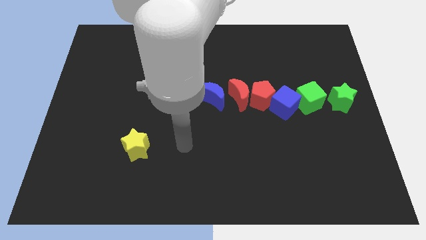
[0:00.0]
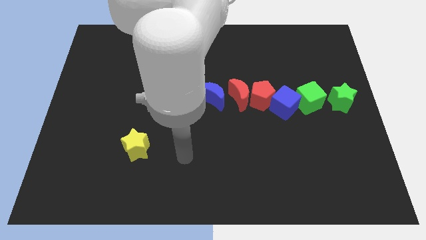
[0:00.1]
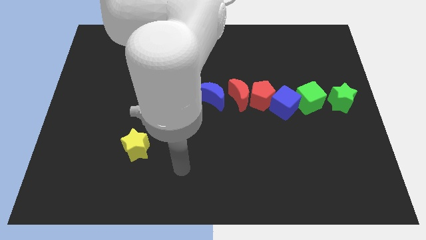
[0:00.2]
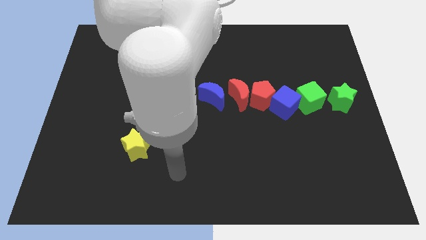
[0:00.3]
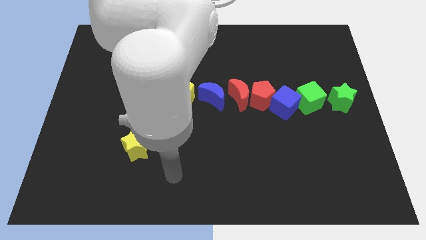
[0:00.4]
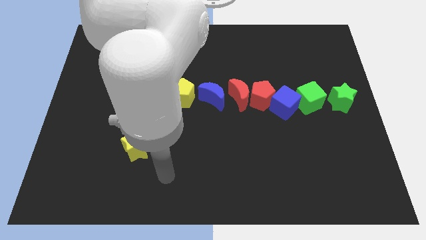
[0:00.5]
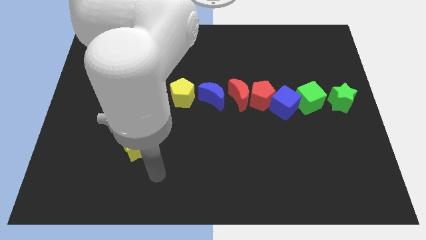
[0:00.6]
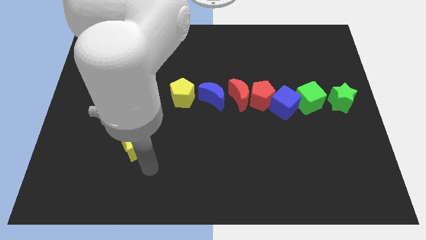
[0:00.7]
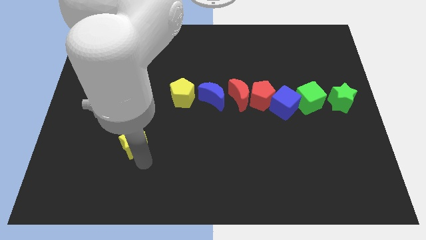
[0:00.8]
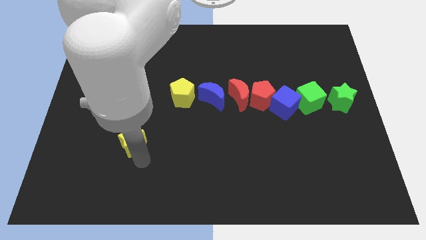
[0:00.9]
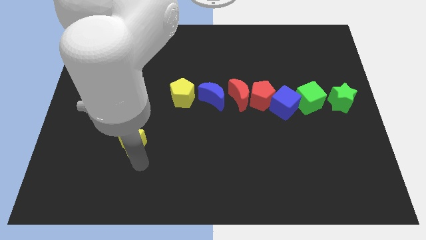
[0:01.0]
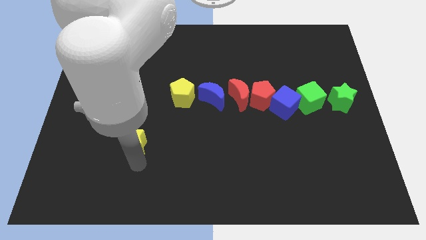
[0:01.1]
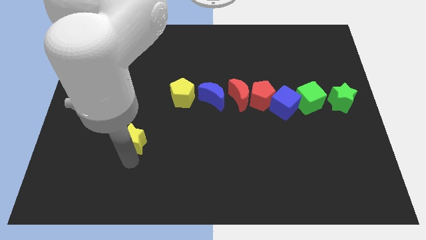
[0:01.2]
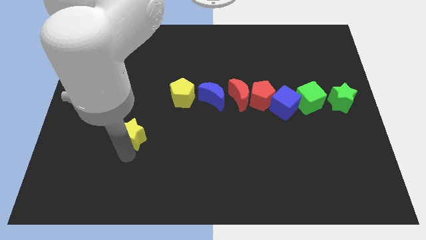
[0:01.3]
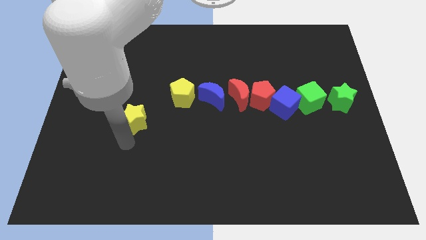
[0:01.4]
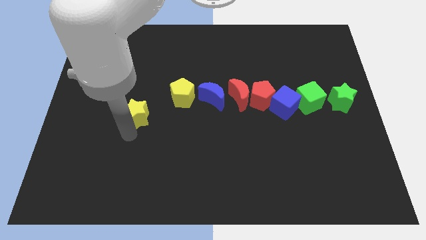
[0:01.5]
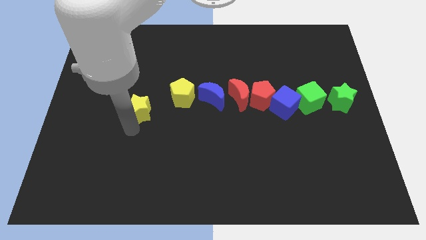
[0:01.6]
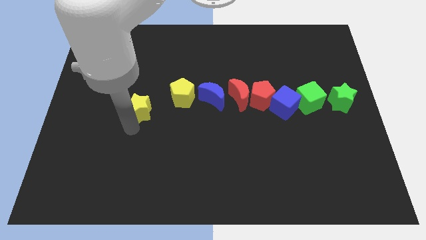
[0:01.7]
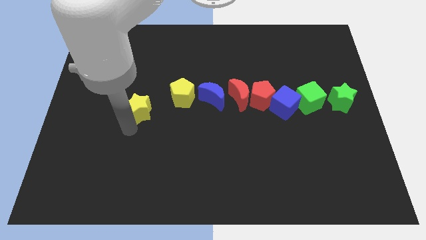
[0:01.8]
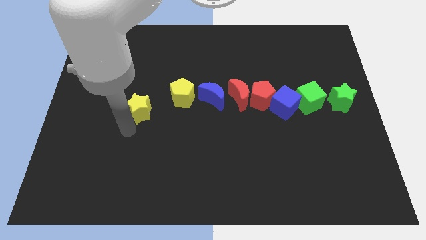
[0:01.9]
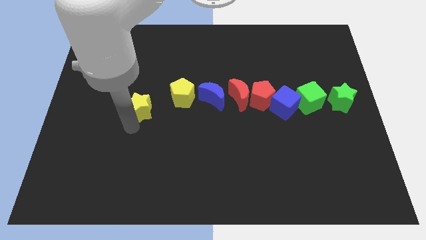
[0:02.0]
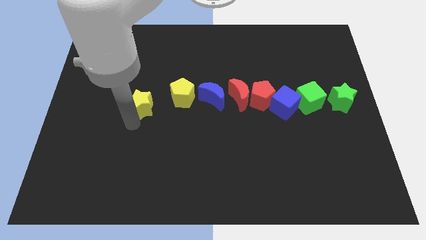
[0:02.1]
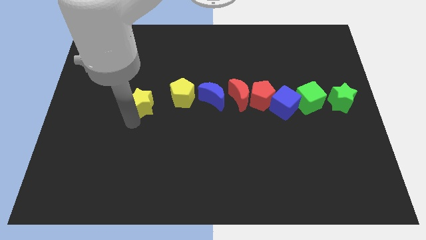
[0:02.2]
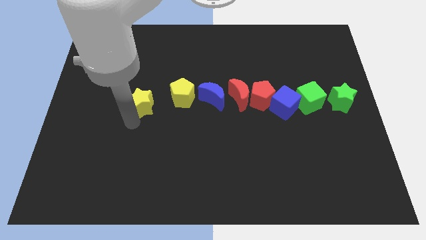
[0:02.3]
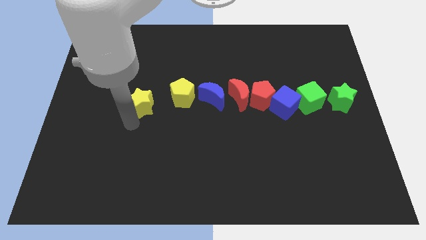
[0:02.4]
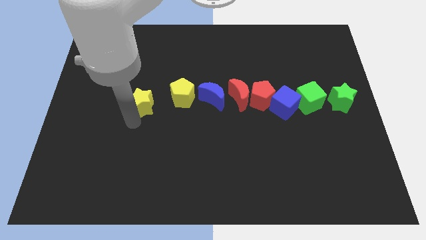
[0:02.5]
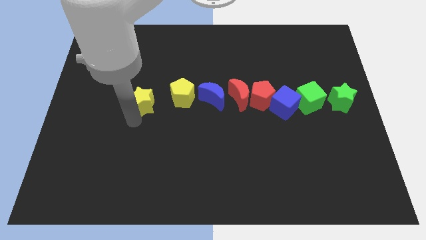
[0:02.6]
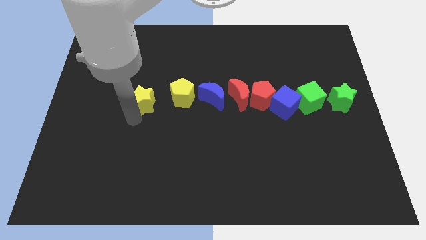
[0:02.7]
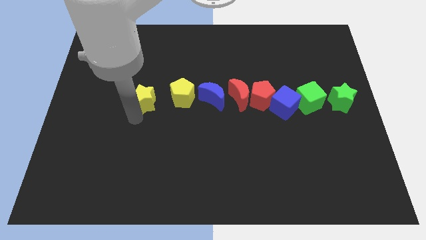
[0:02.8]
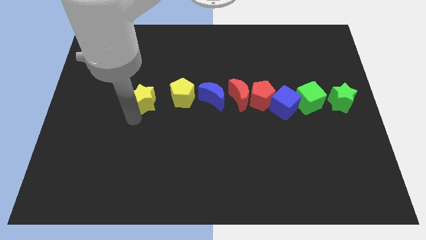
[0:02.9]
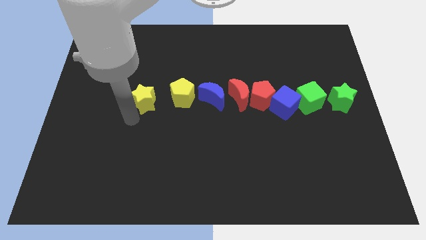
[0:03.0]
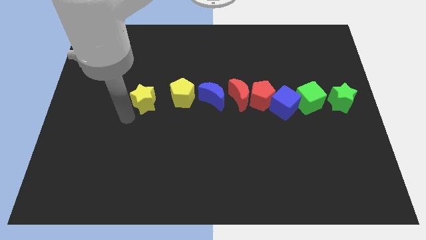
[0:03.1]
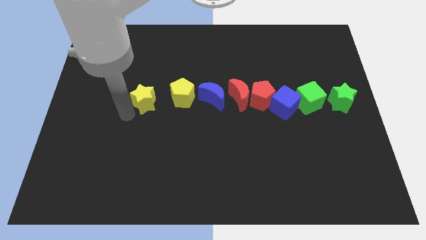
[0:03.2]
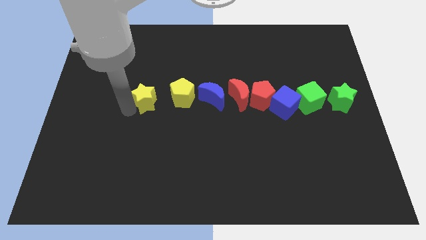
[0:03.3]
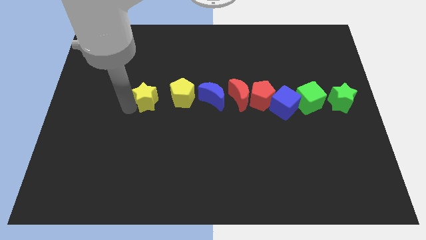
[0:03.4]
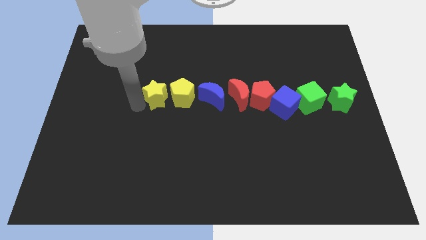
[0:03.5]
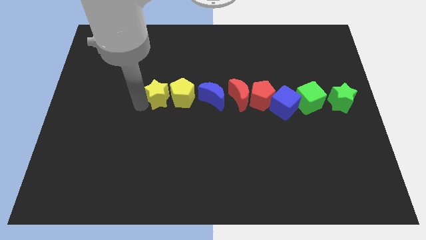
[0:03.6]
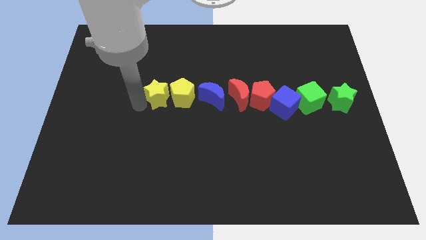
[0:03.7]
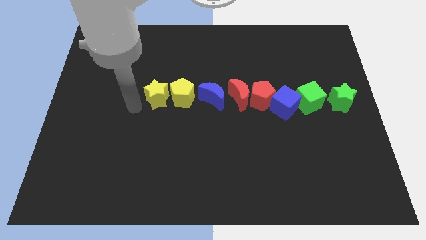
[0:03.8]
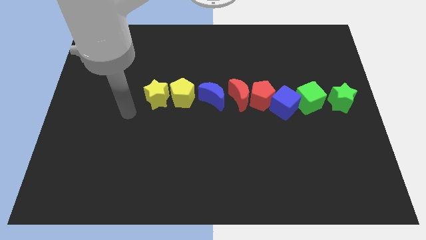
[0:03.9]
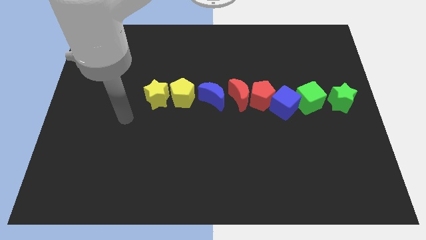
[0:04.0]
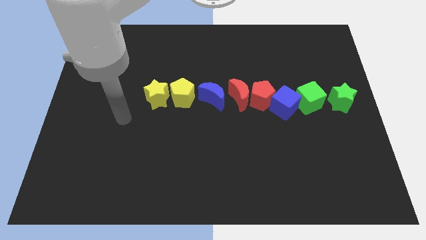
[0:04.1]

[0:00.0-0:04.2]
move the yellow star parallel left to the yellow pentagon

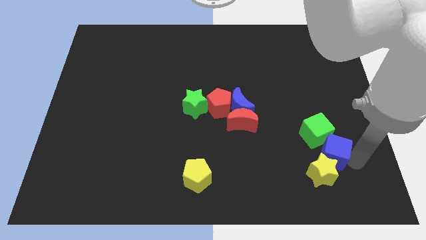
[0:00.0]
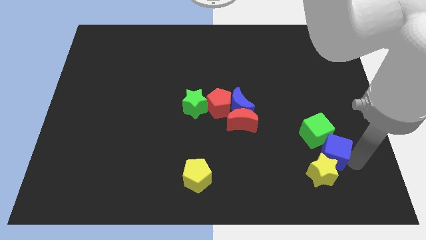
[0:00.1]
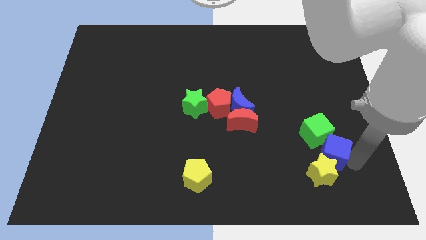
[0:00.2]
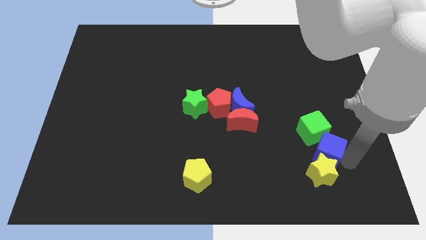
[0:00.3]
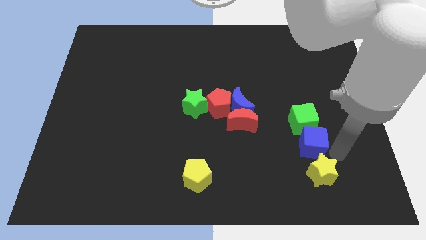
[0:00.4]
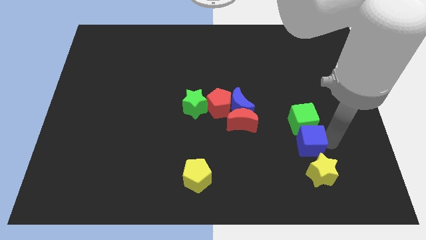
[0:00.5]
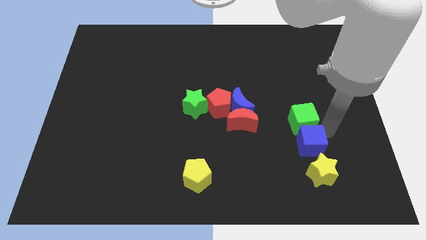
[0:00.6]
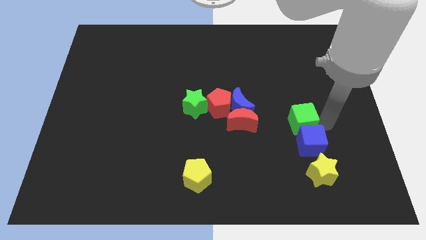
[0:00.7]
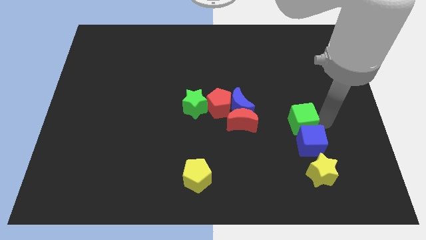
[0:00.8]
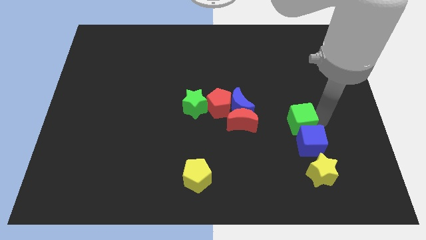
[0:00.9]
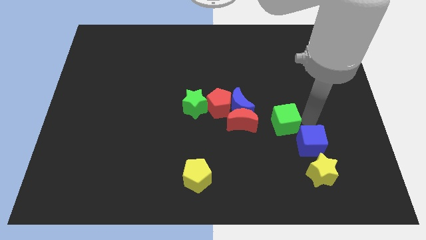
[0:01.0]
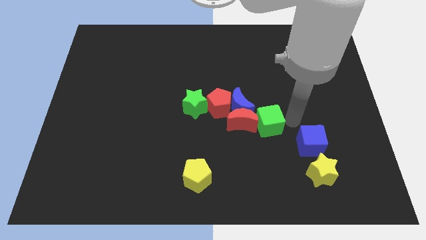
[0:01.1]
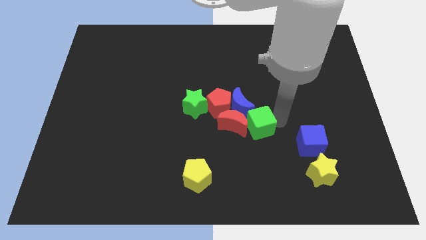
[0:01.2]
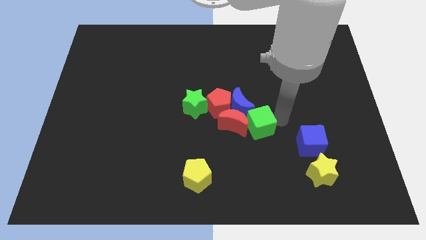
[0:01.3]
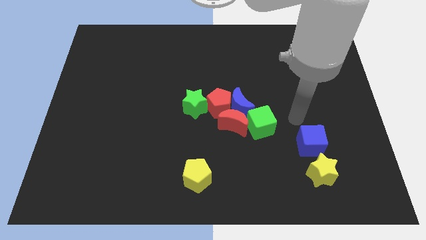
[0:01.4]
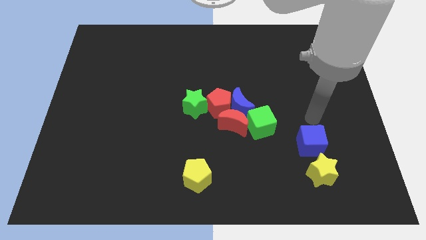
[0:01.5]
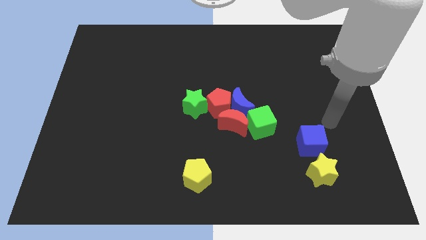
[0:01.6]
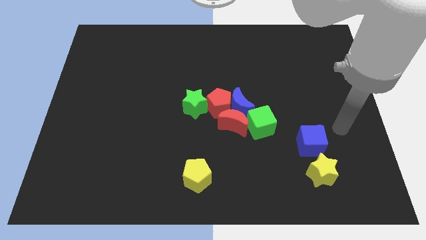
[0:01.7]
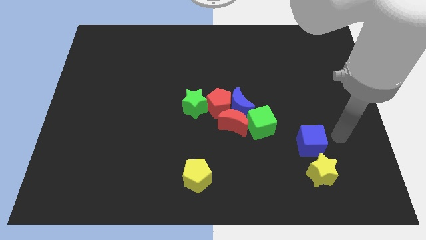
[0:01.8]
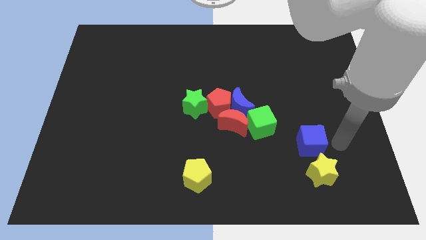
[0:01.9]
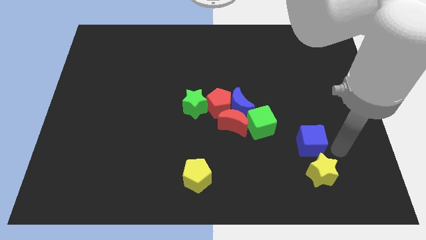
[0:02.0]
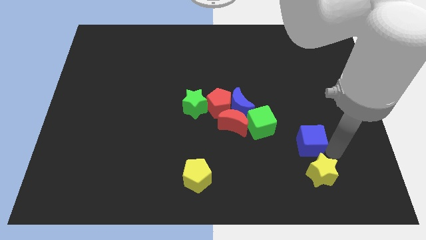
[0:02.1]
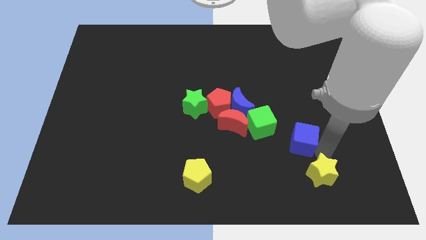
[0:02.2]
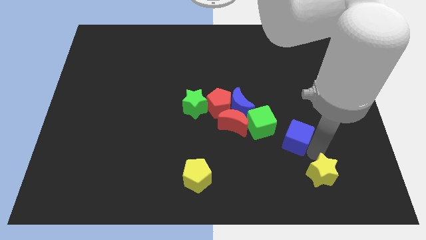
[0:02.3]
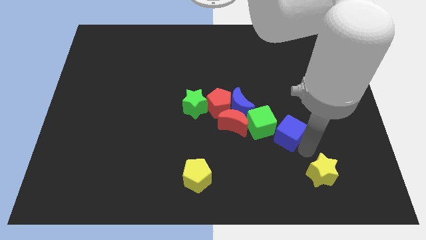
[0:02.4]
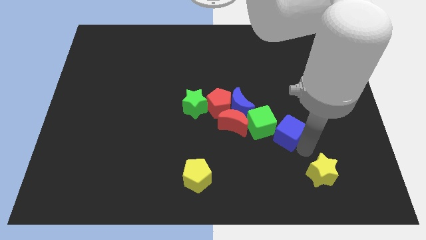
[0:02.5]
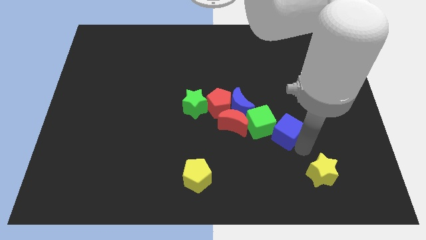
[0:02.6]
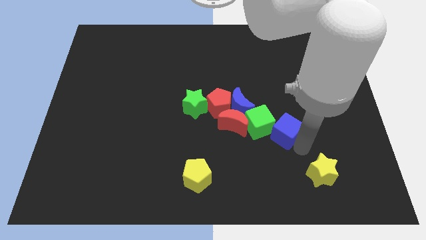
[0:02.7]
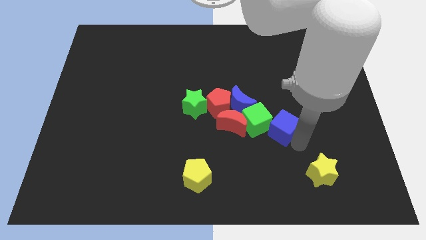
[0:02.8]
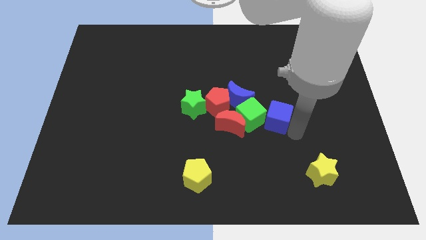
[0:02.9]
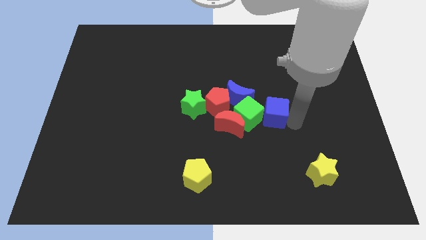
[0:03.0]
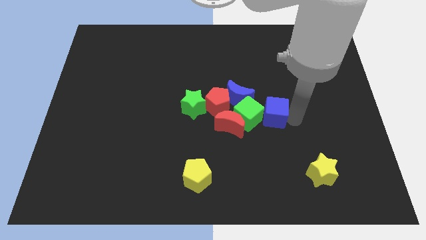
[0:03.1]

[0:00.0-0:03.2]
push the green cube and blue cube into the right side of the red moon

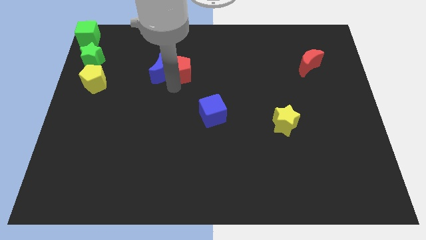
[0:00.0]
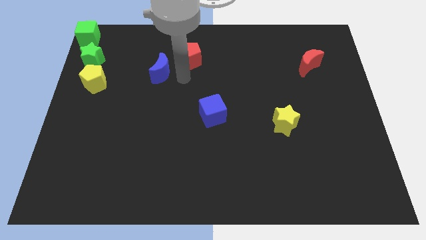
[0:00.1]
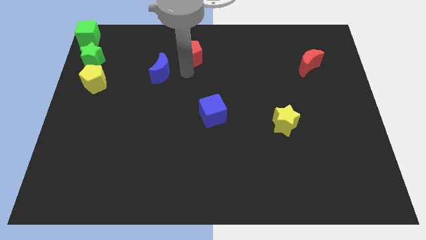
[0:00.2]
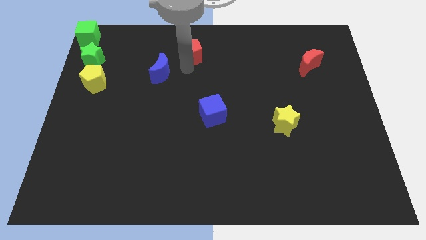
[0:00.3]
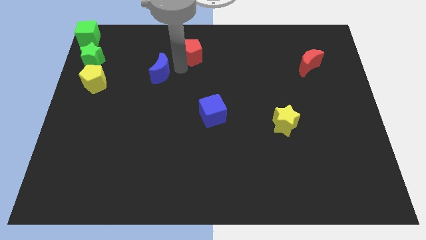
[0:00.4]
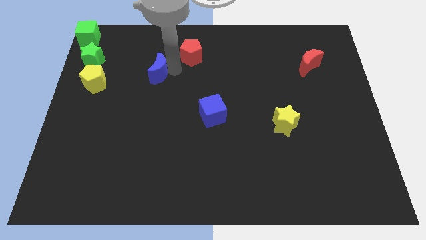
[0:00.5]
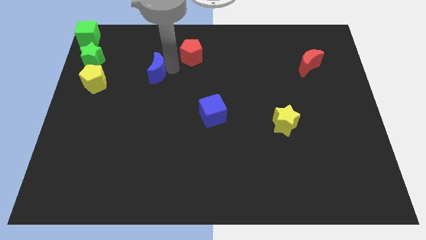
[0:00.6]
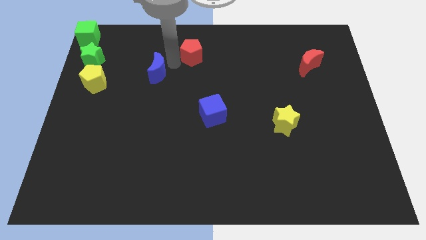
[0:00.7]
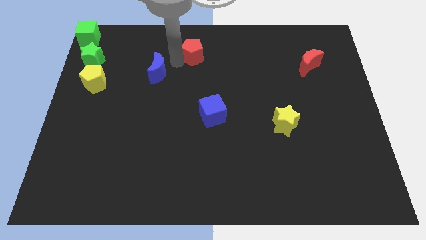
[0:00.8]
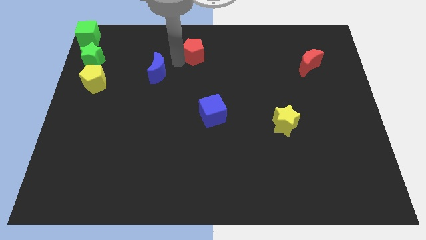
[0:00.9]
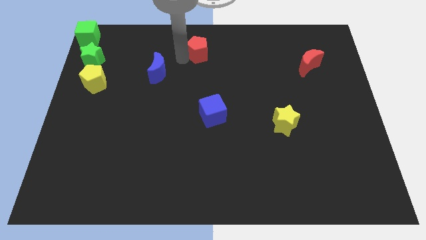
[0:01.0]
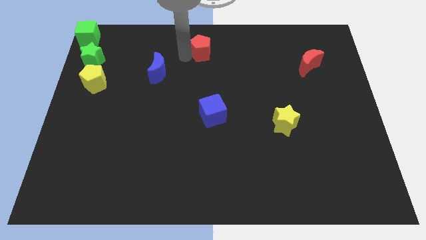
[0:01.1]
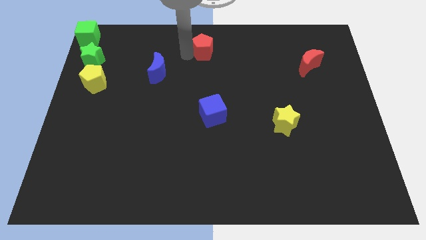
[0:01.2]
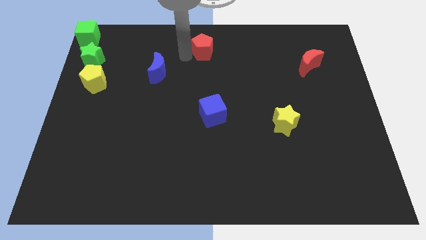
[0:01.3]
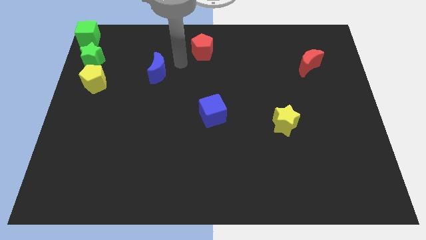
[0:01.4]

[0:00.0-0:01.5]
push the red pentagon away from the blue moon
